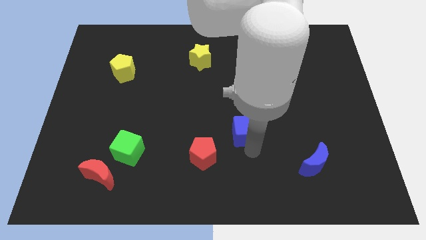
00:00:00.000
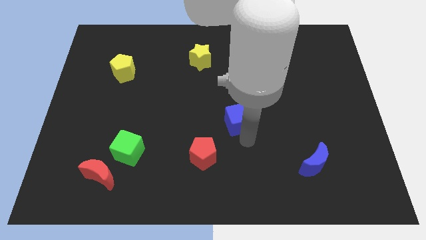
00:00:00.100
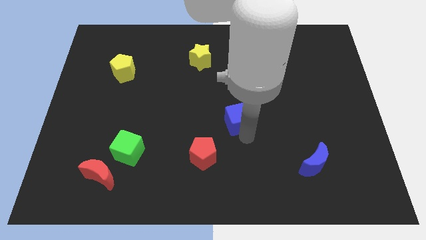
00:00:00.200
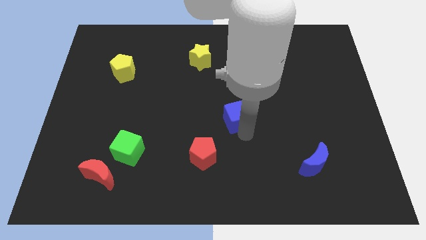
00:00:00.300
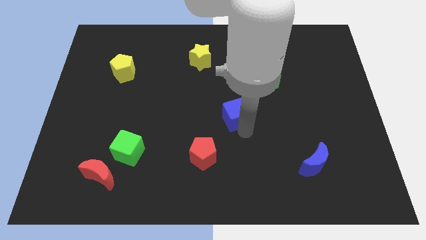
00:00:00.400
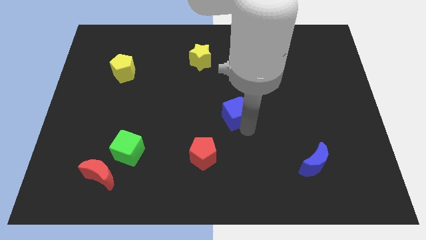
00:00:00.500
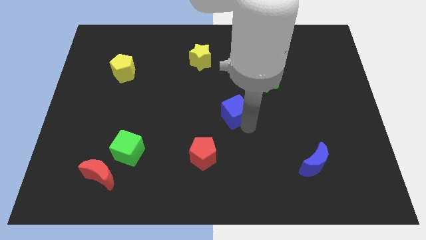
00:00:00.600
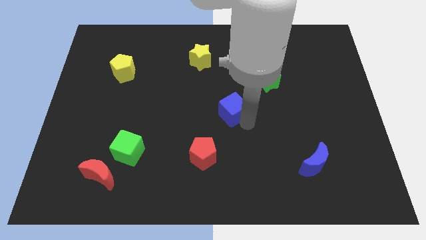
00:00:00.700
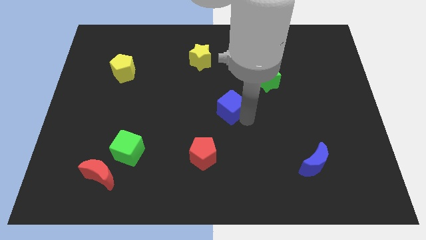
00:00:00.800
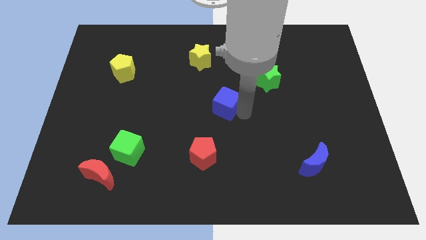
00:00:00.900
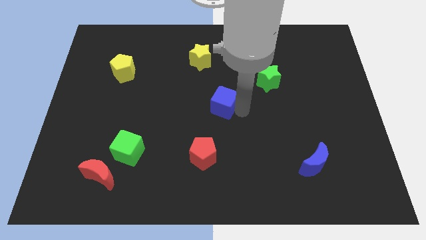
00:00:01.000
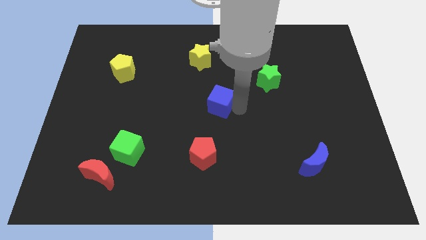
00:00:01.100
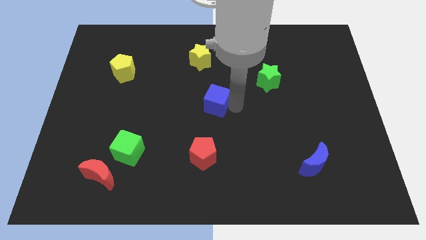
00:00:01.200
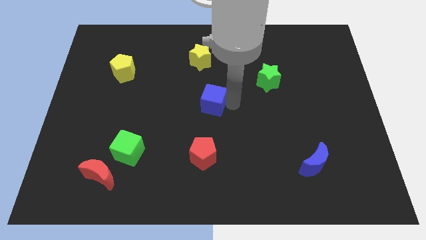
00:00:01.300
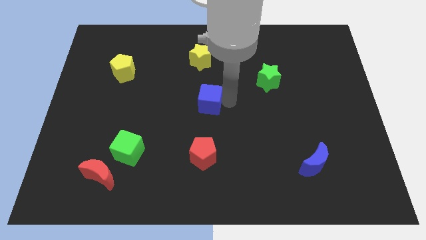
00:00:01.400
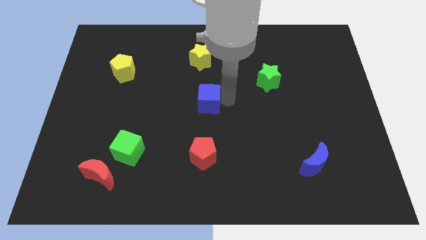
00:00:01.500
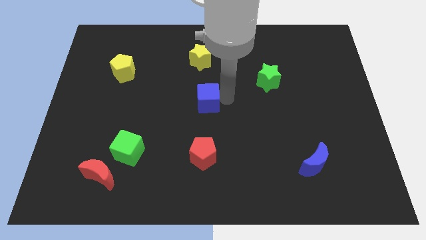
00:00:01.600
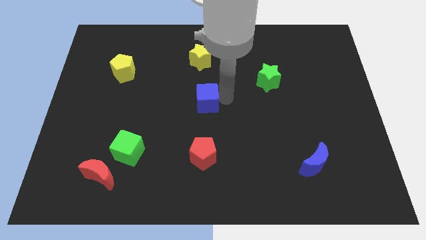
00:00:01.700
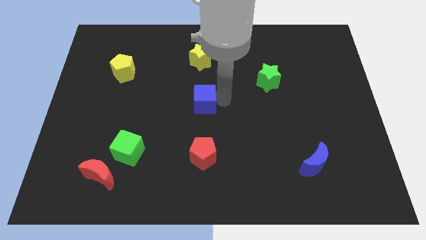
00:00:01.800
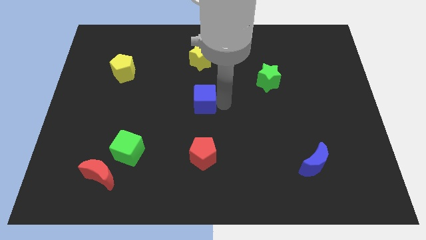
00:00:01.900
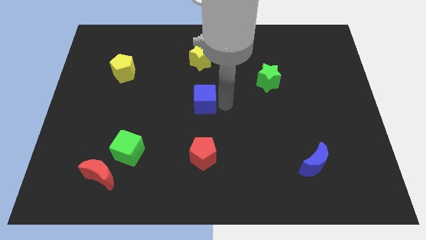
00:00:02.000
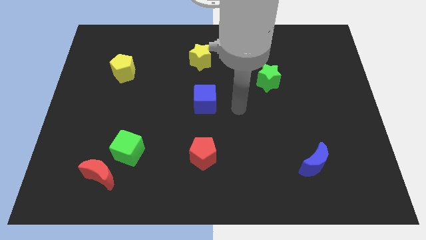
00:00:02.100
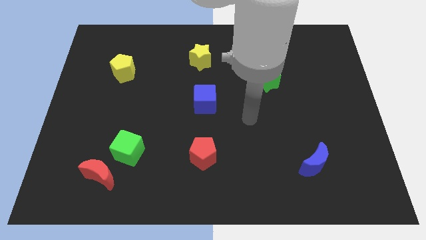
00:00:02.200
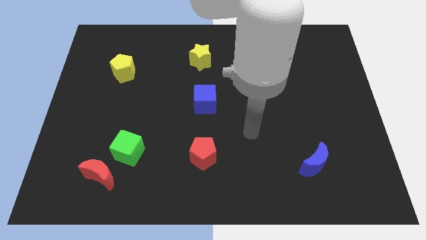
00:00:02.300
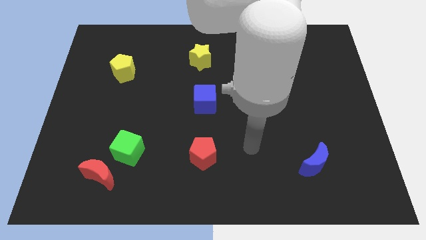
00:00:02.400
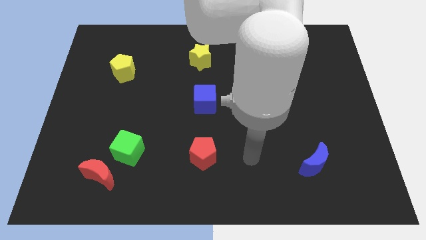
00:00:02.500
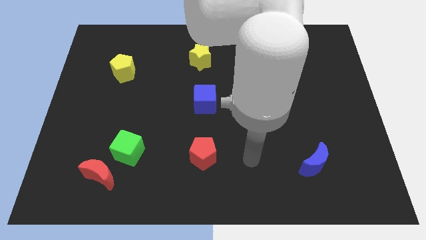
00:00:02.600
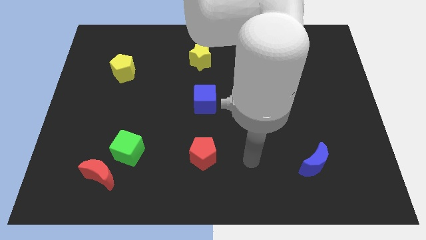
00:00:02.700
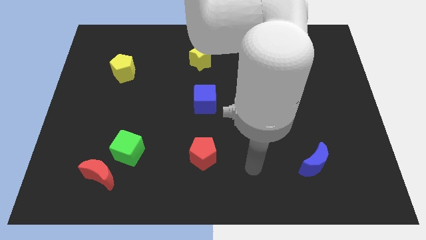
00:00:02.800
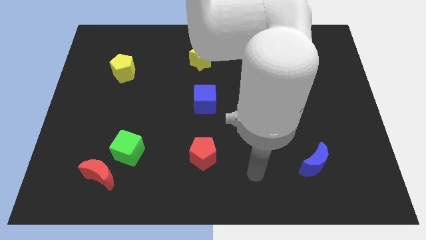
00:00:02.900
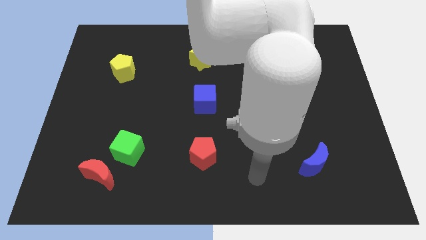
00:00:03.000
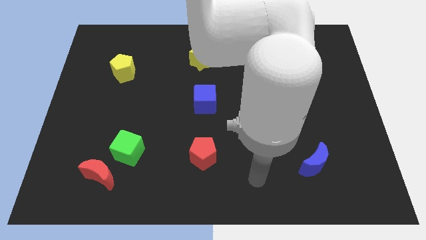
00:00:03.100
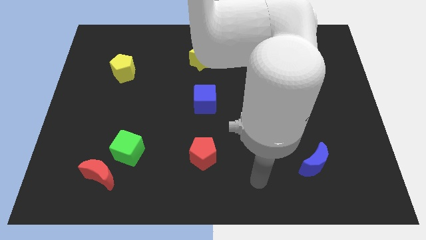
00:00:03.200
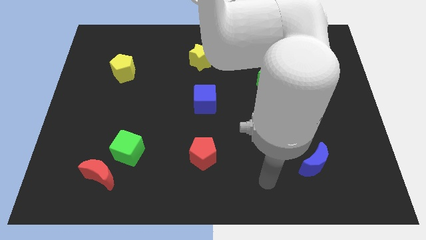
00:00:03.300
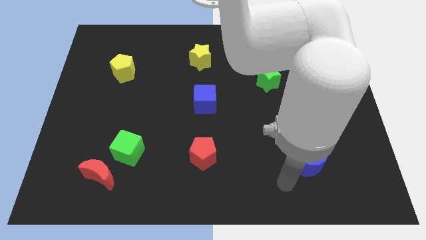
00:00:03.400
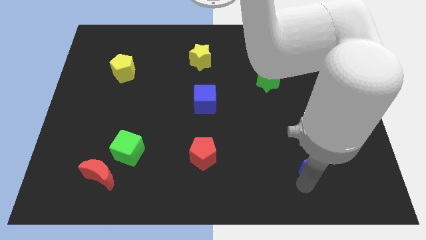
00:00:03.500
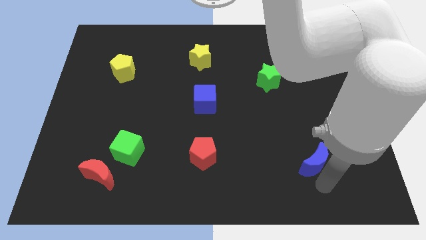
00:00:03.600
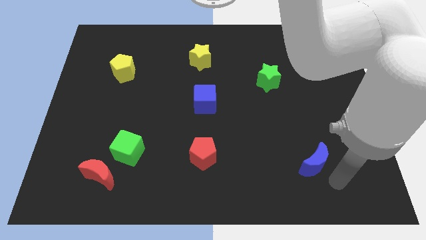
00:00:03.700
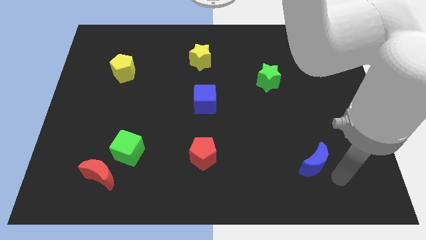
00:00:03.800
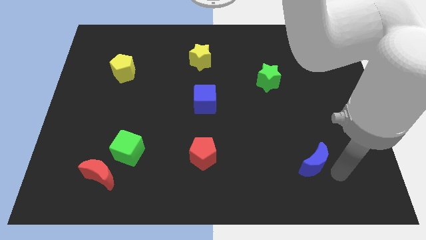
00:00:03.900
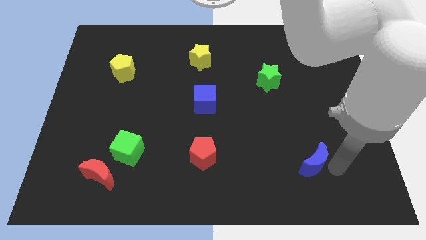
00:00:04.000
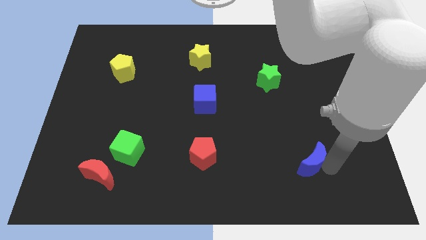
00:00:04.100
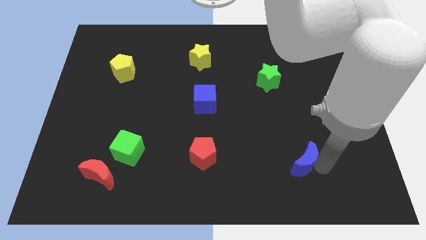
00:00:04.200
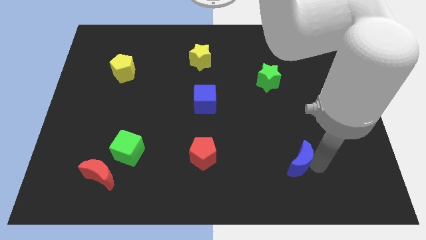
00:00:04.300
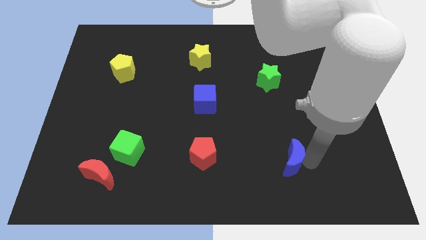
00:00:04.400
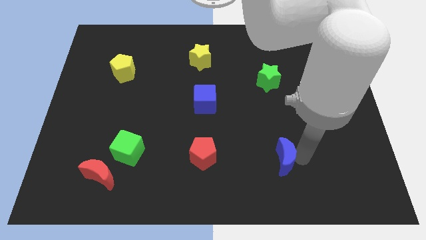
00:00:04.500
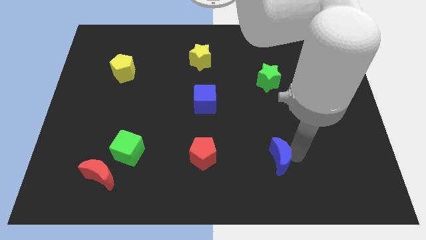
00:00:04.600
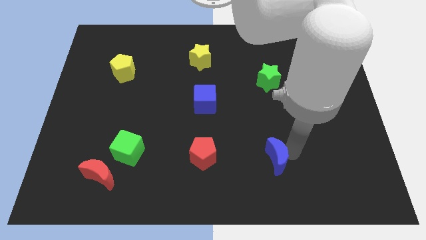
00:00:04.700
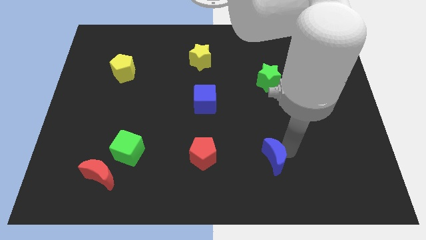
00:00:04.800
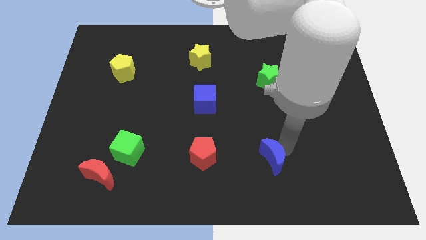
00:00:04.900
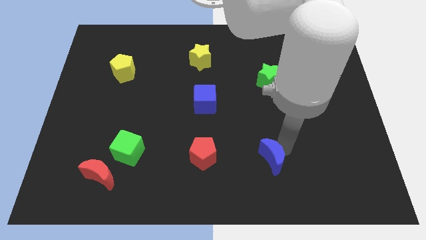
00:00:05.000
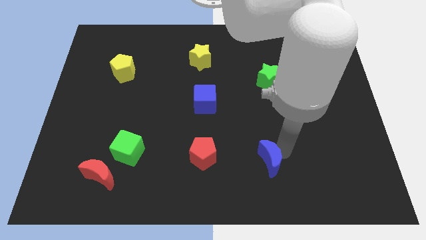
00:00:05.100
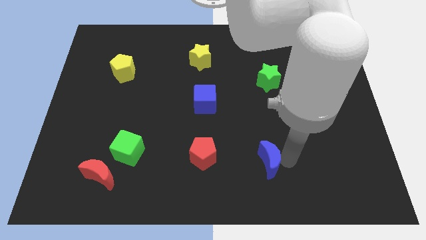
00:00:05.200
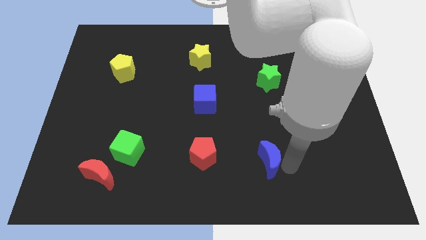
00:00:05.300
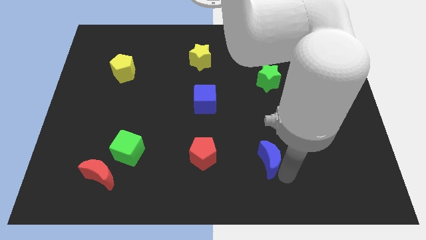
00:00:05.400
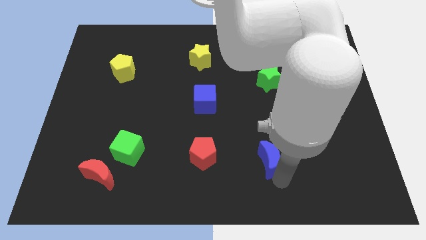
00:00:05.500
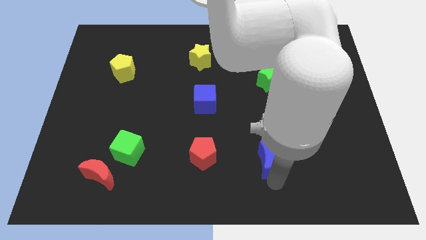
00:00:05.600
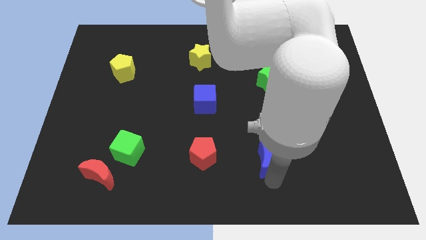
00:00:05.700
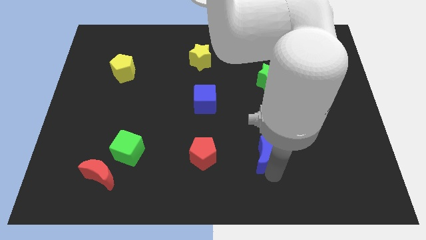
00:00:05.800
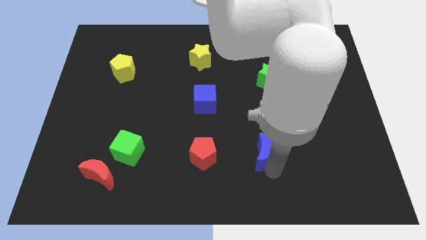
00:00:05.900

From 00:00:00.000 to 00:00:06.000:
place the blue moon to the right side of the red pentagon

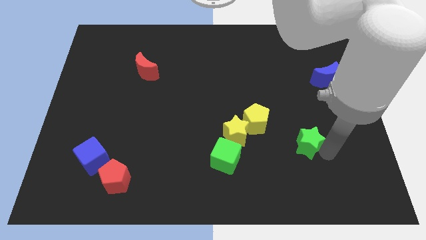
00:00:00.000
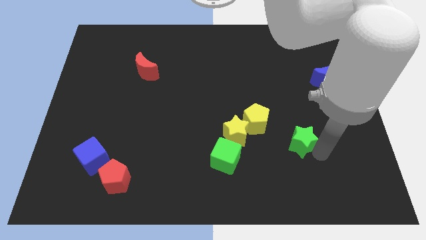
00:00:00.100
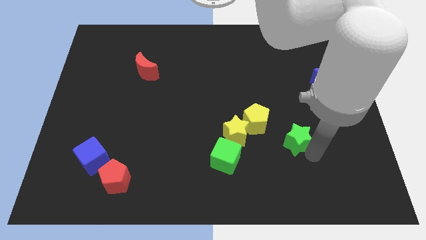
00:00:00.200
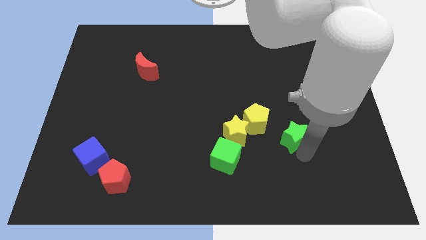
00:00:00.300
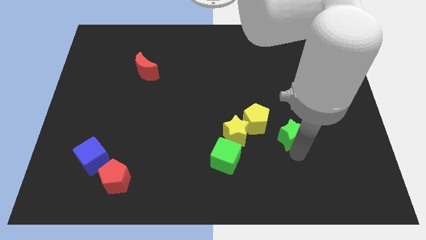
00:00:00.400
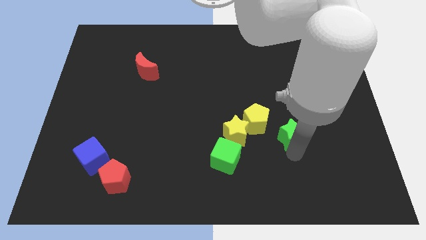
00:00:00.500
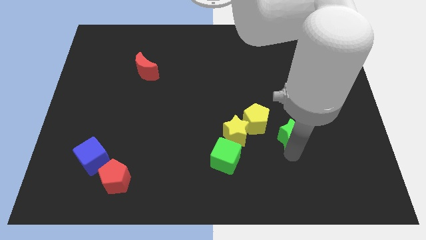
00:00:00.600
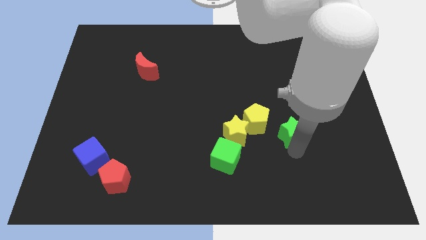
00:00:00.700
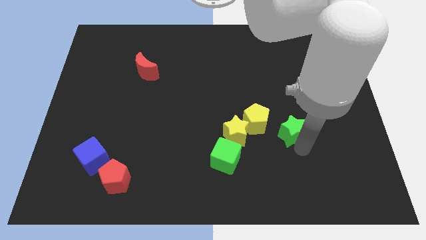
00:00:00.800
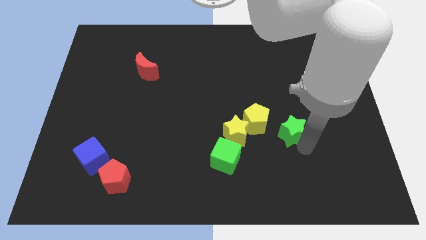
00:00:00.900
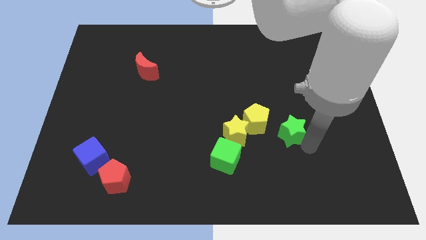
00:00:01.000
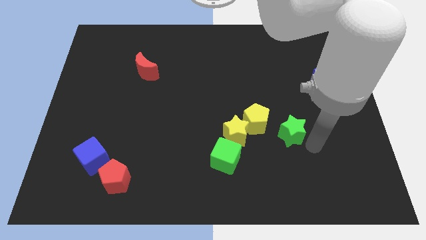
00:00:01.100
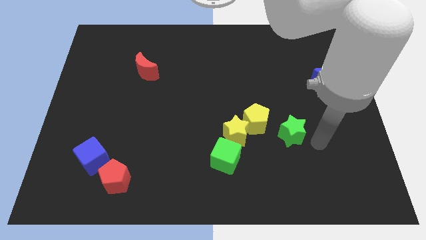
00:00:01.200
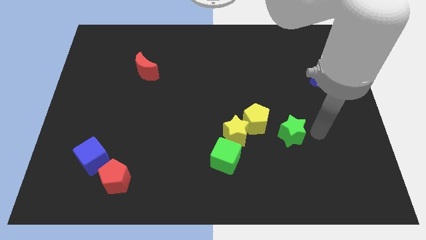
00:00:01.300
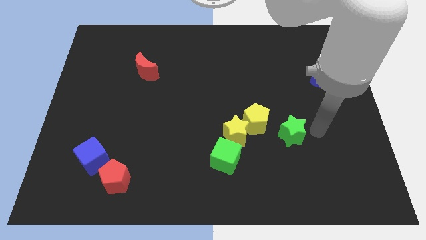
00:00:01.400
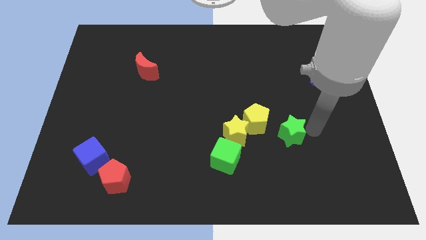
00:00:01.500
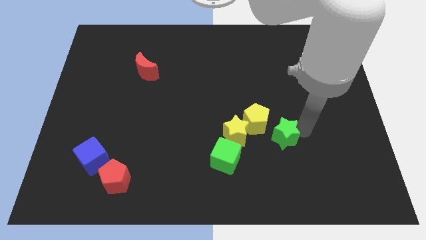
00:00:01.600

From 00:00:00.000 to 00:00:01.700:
push the green star to the right of the yellow pentagon

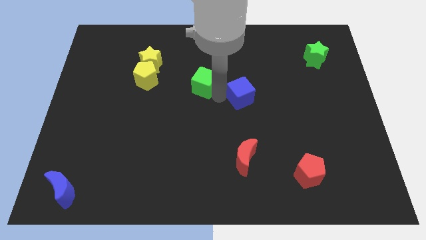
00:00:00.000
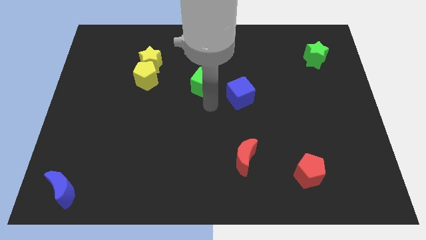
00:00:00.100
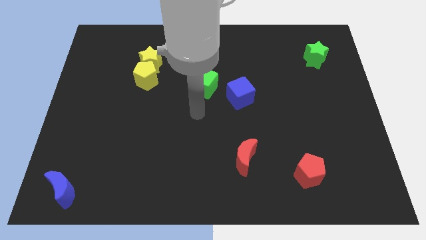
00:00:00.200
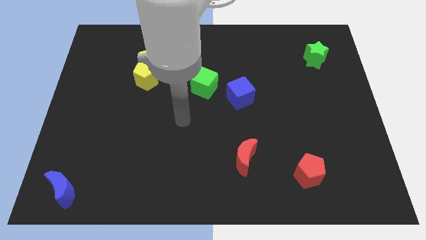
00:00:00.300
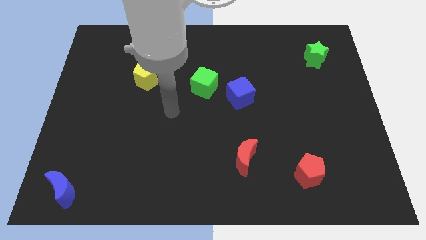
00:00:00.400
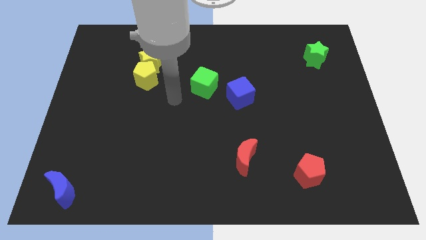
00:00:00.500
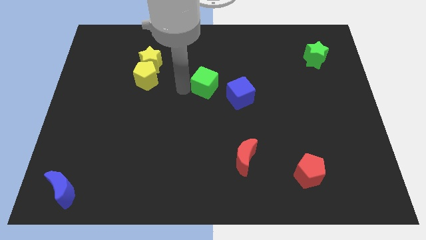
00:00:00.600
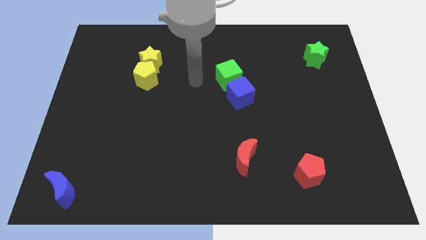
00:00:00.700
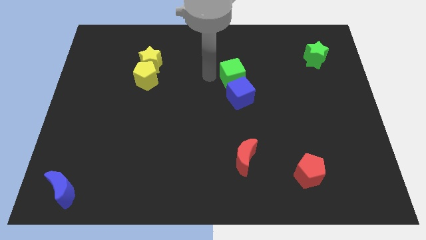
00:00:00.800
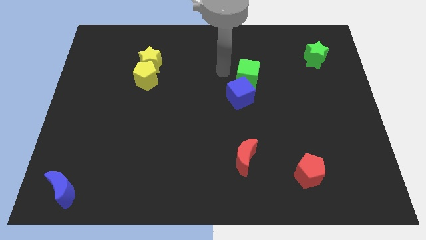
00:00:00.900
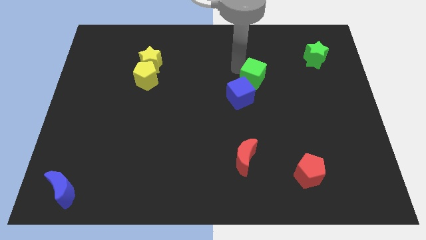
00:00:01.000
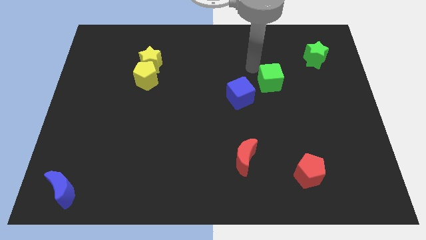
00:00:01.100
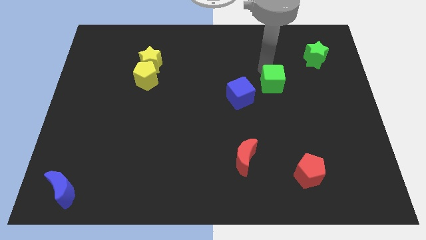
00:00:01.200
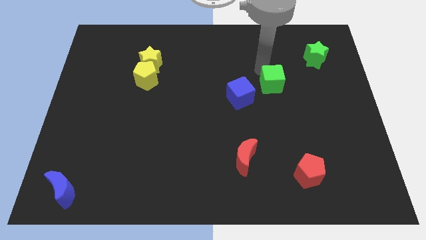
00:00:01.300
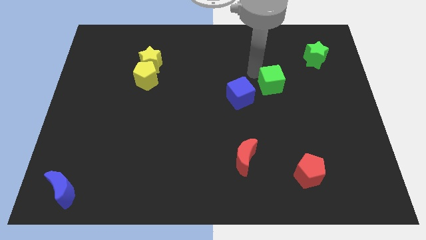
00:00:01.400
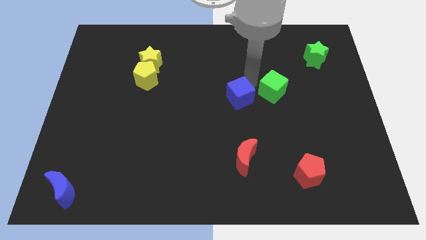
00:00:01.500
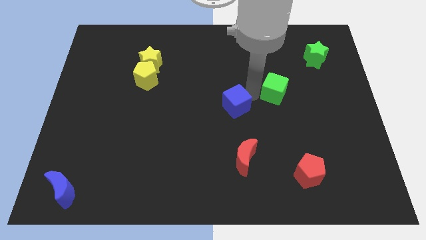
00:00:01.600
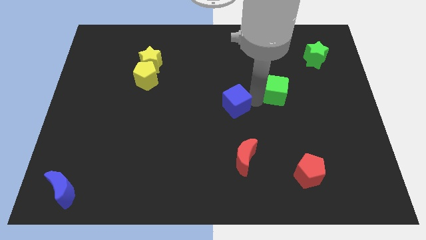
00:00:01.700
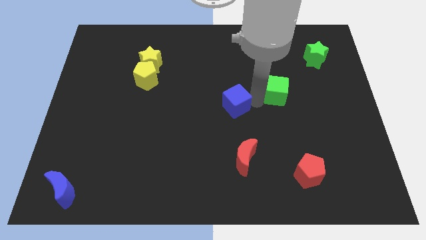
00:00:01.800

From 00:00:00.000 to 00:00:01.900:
move green cube to the right of the blue cube
